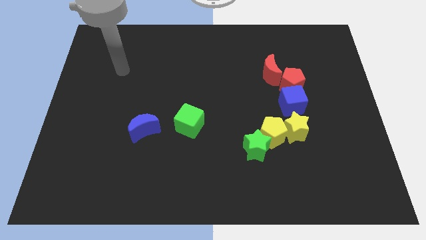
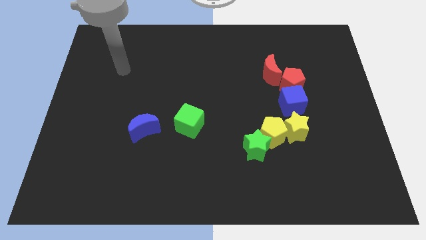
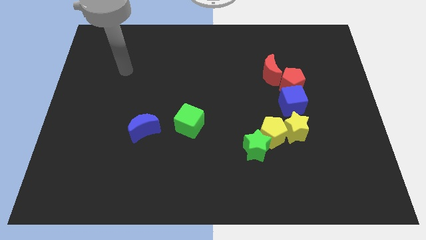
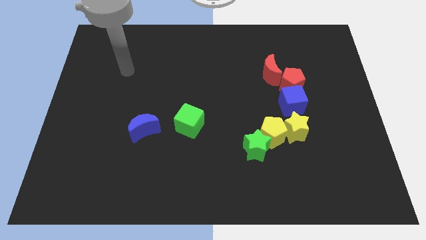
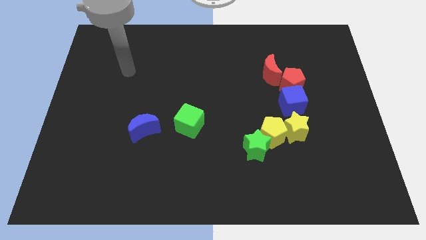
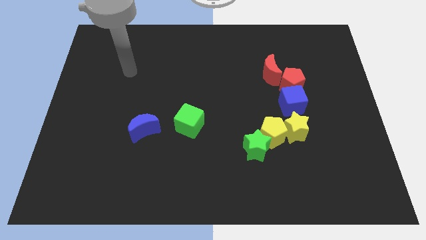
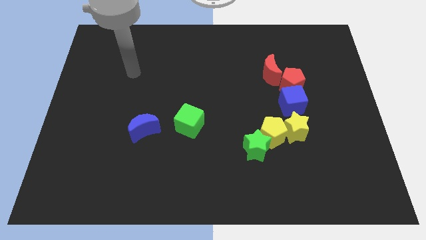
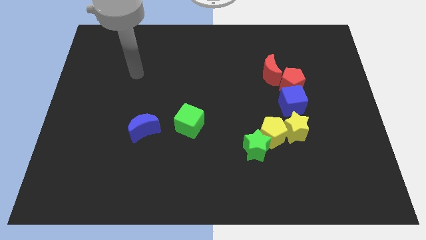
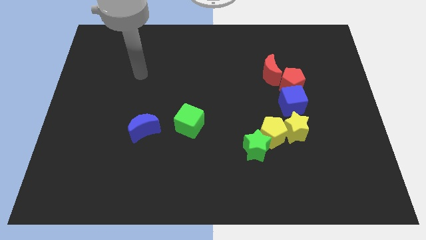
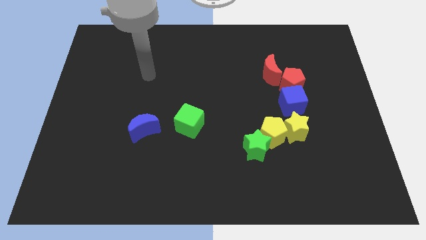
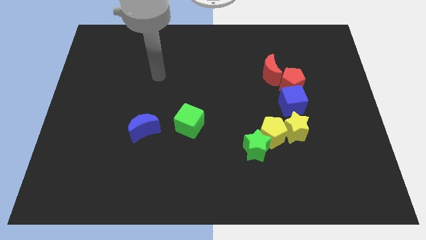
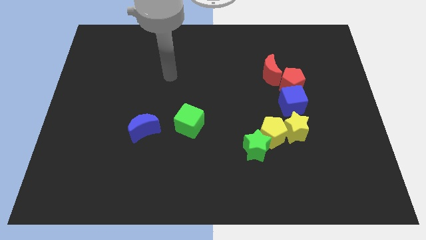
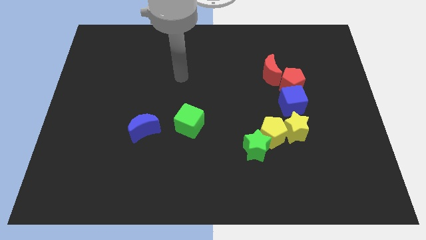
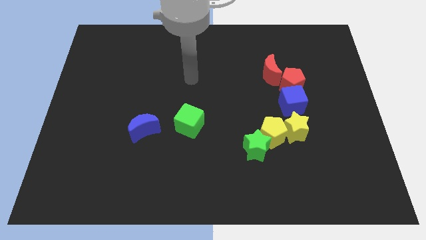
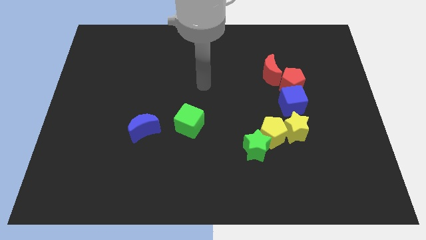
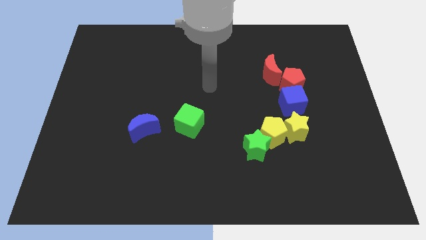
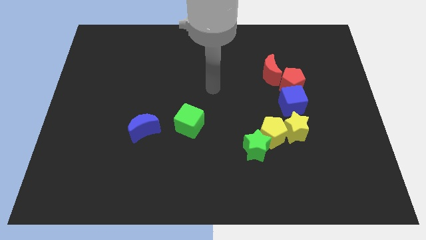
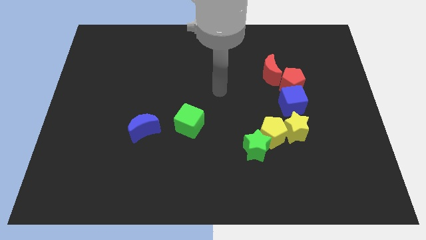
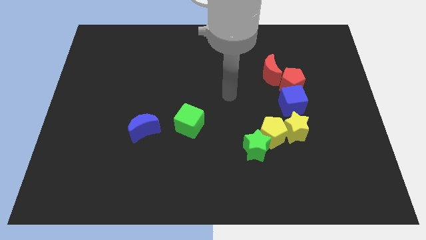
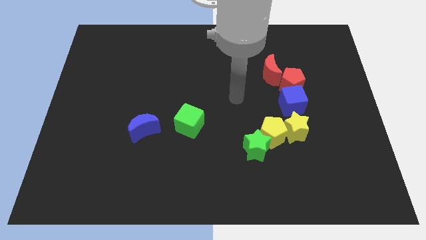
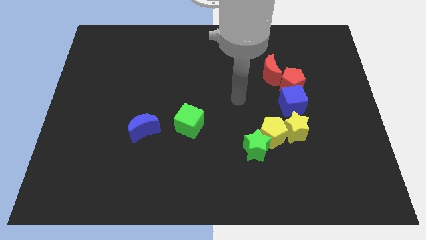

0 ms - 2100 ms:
move the arm towards the left of the blue cube

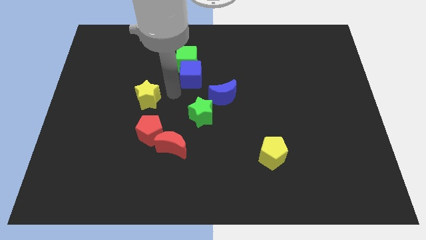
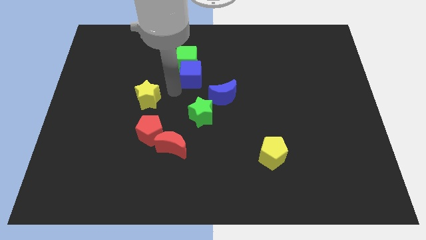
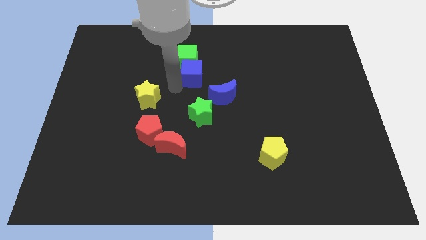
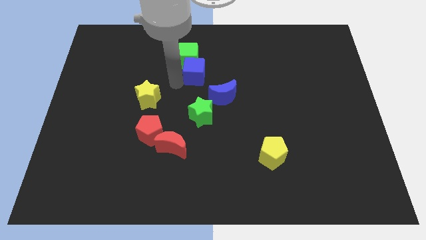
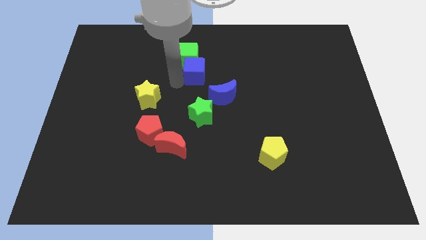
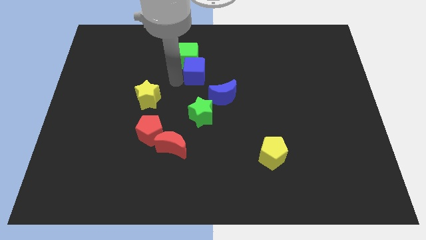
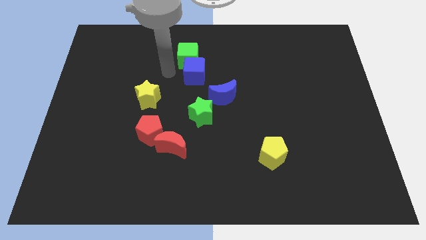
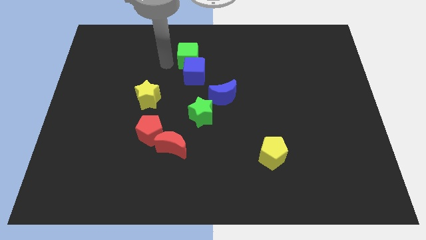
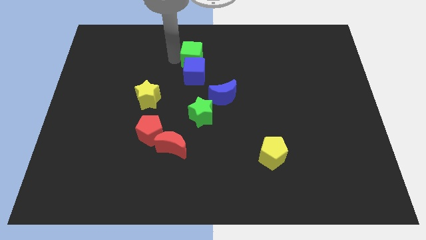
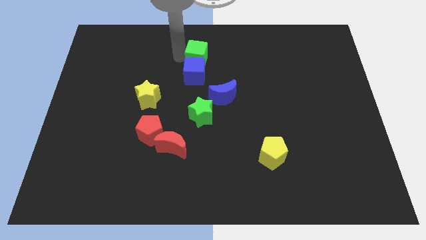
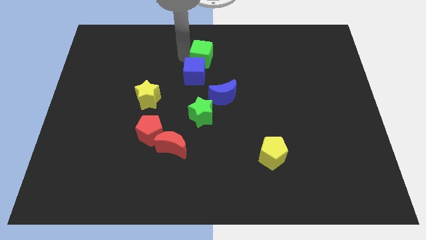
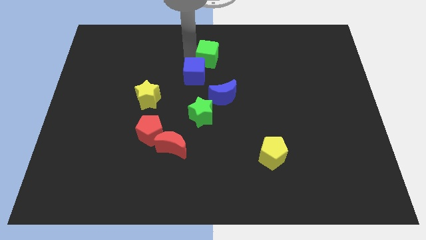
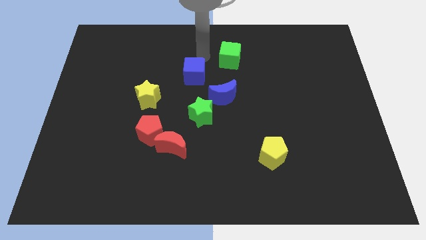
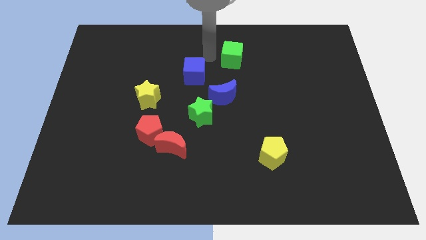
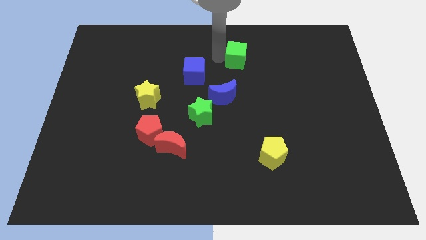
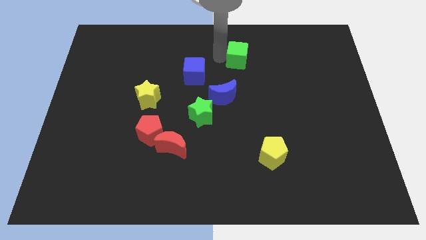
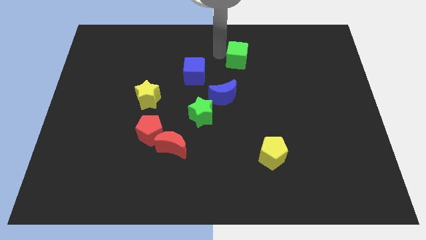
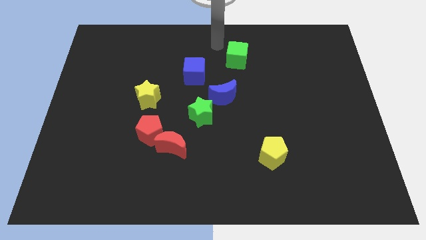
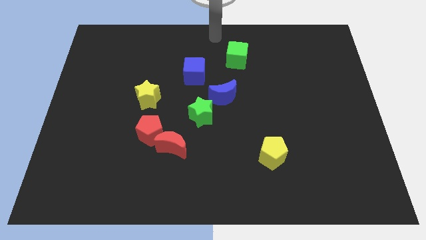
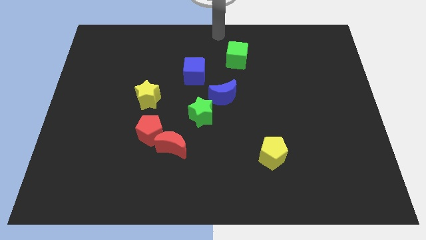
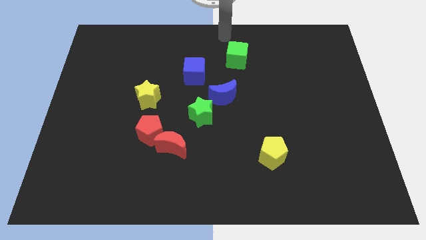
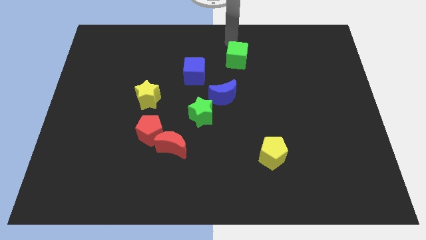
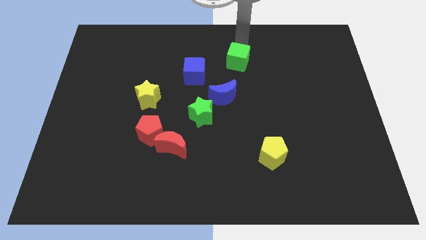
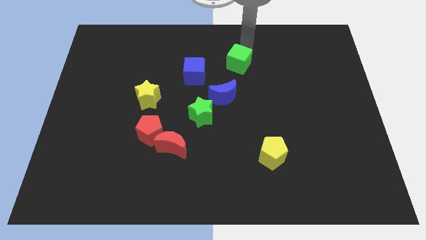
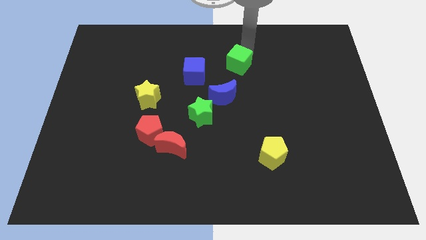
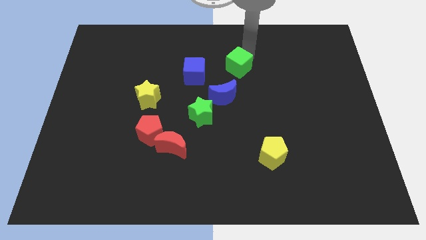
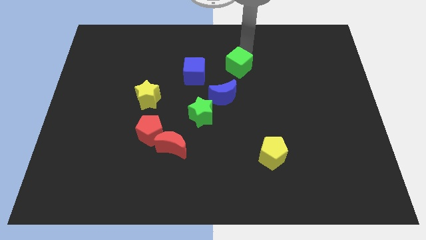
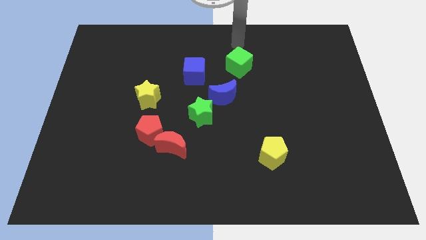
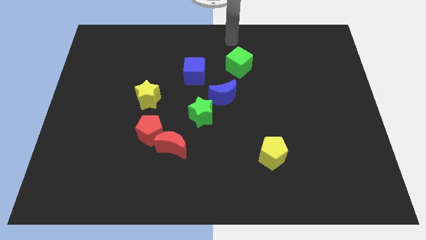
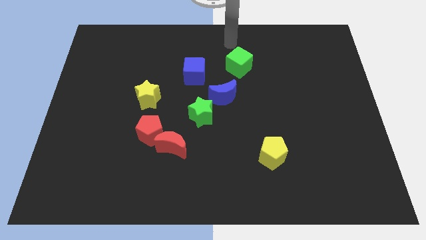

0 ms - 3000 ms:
push the green cube diagonally top right to blue cube

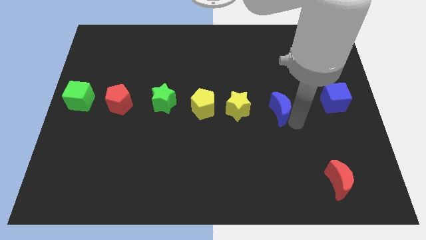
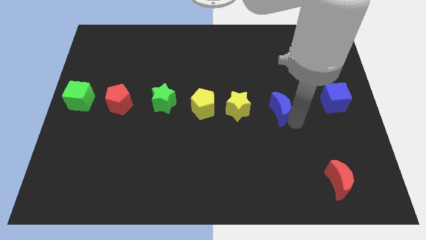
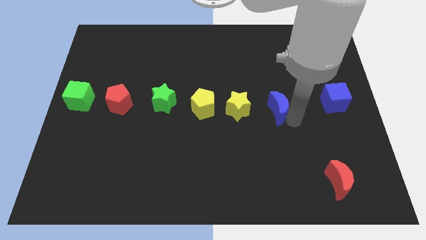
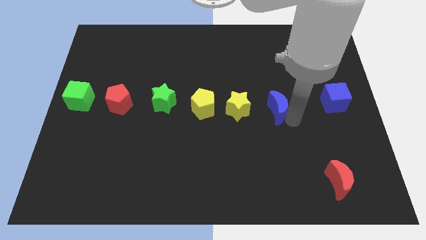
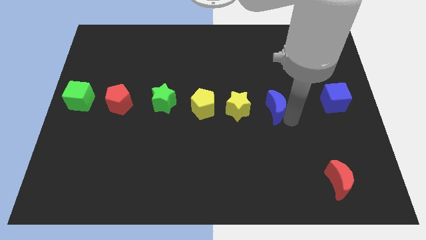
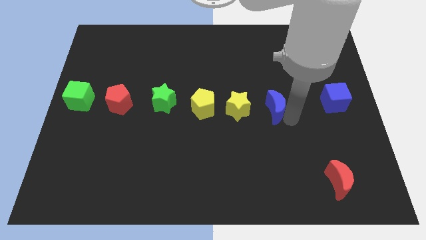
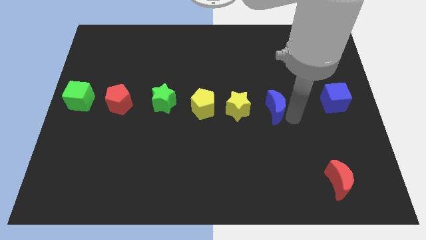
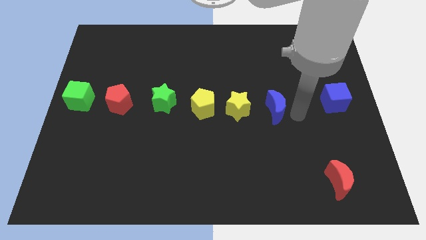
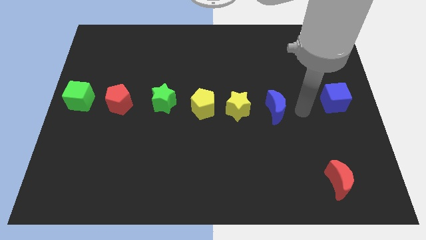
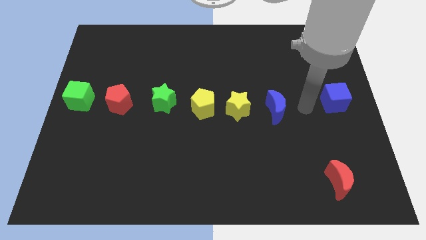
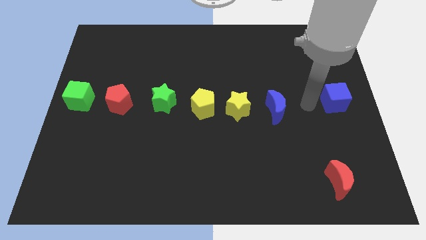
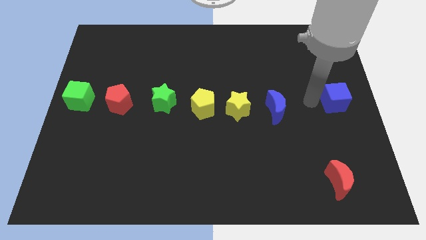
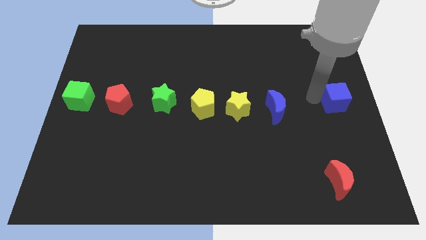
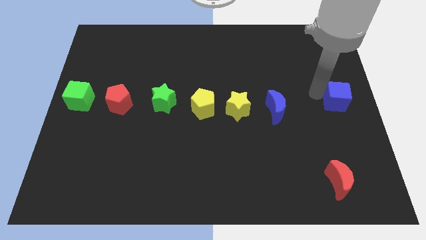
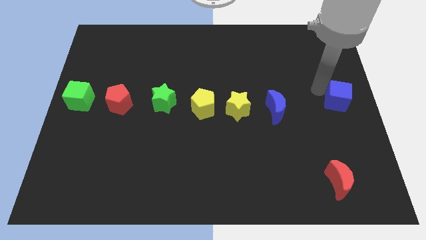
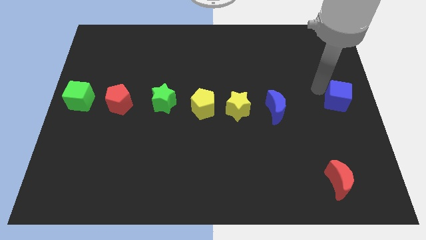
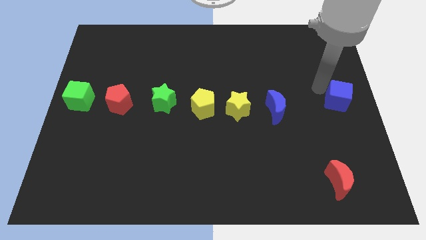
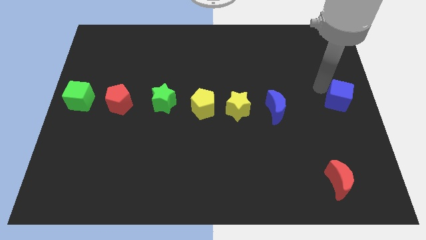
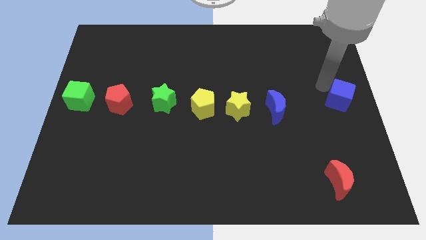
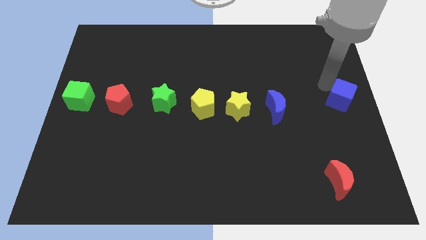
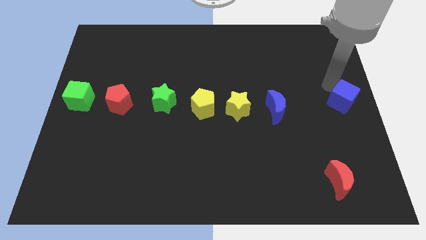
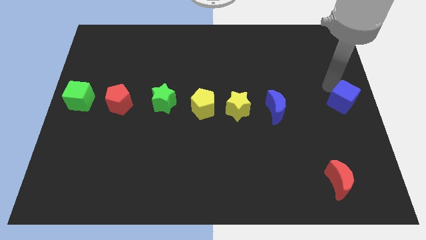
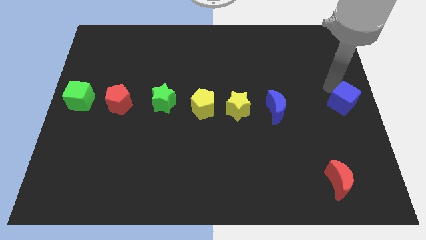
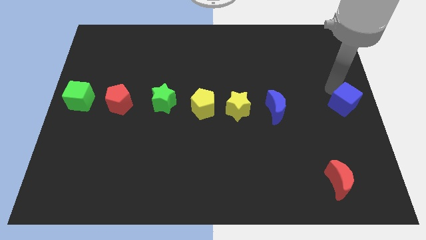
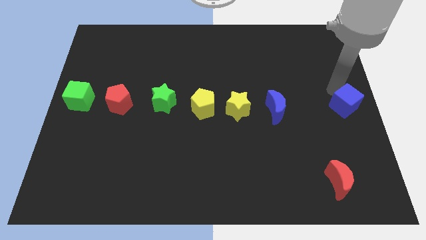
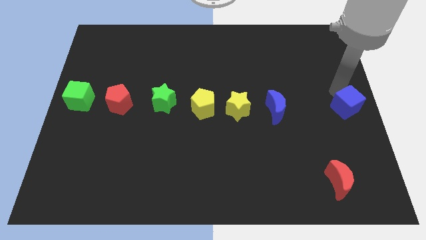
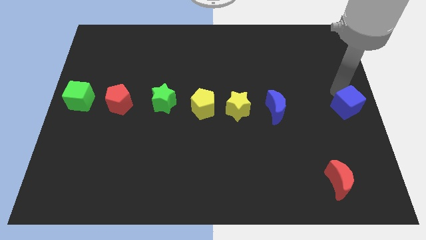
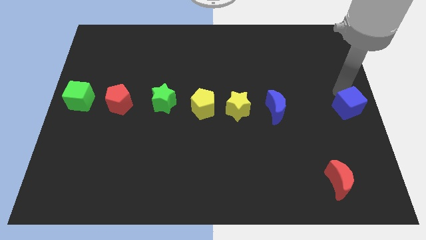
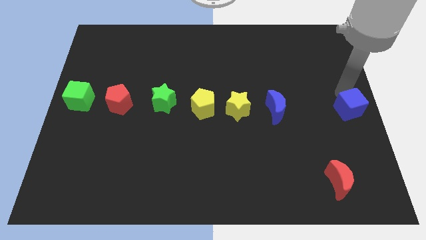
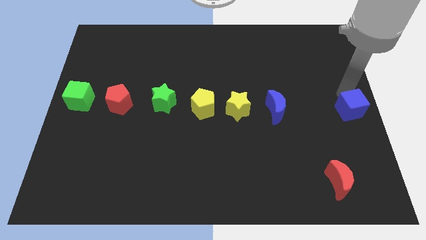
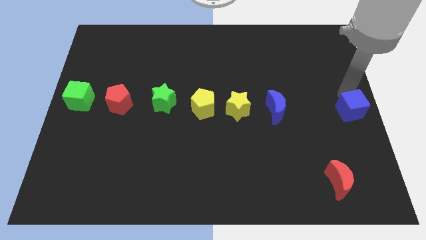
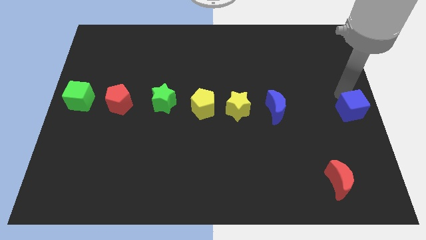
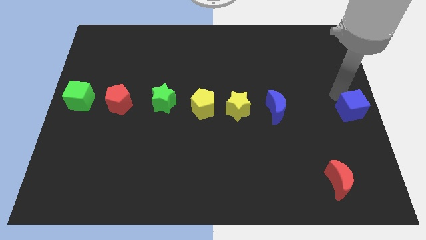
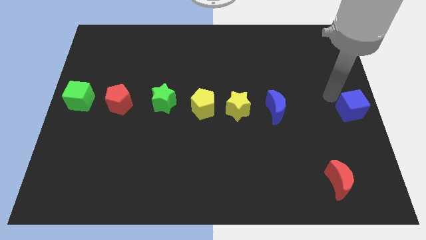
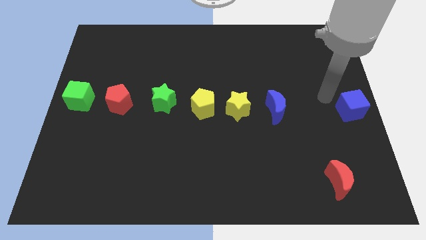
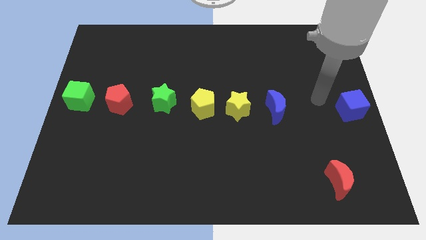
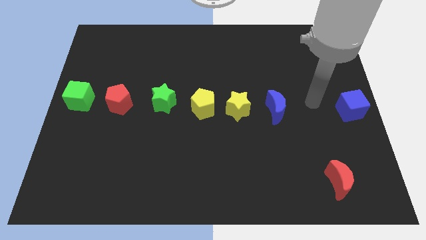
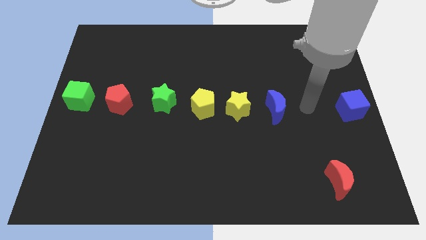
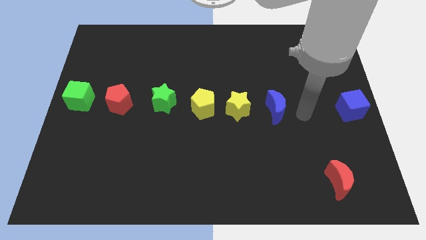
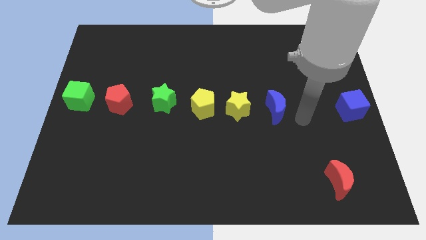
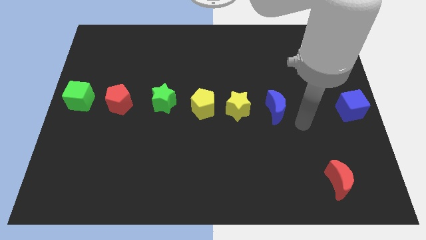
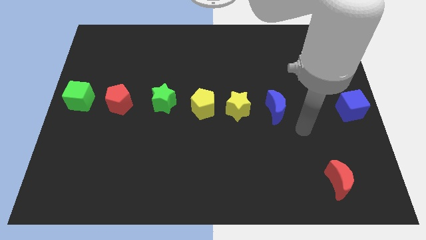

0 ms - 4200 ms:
push blue cube to the right center of the board
